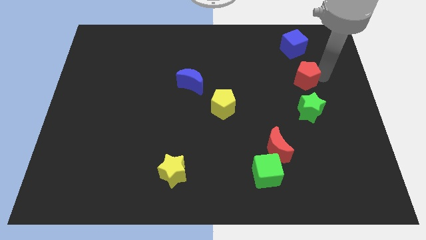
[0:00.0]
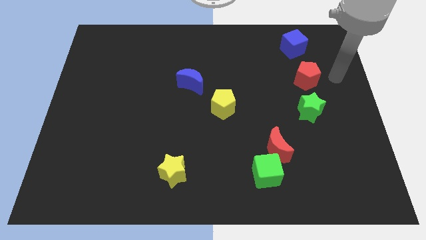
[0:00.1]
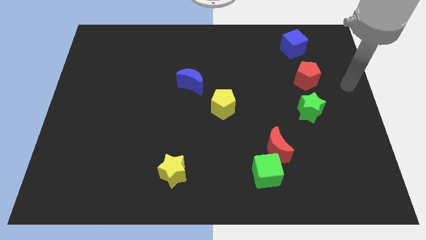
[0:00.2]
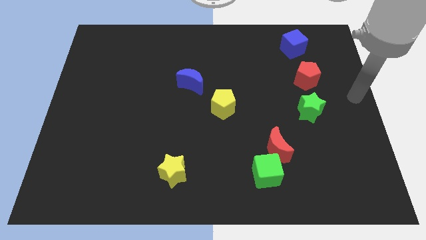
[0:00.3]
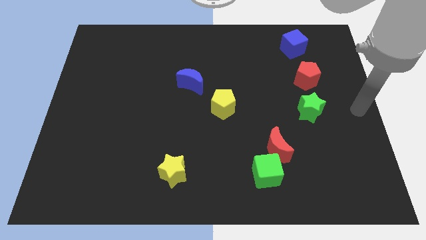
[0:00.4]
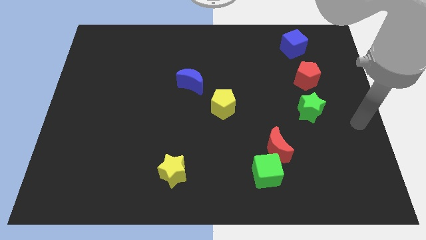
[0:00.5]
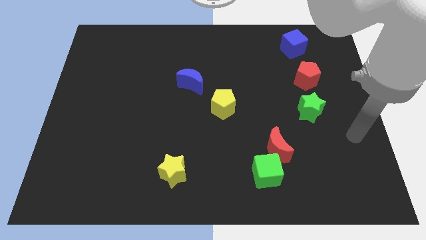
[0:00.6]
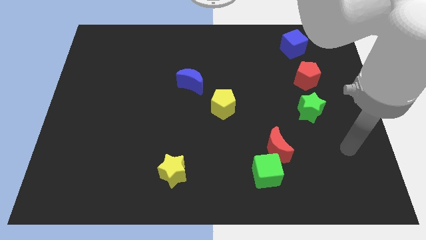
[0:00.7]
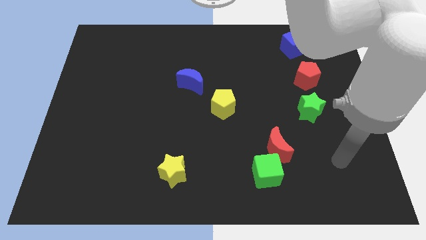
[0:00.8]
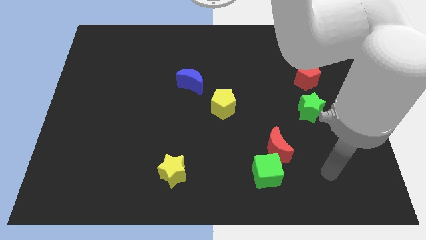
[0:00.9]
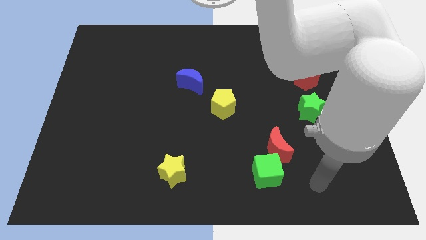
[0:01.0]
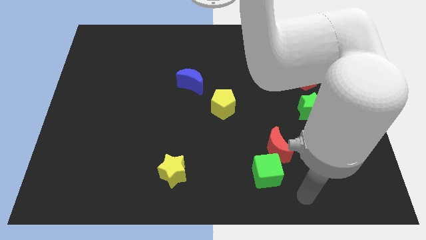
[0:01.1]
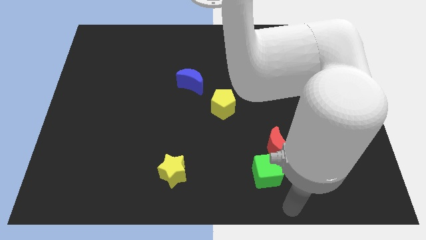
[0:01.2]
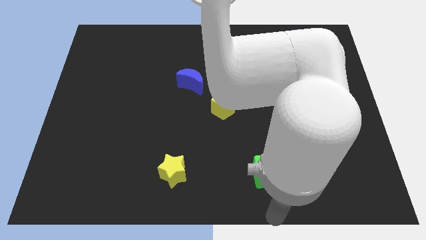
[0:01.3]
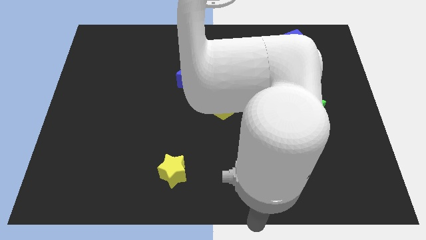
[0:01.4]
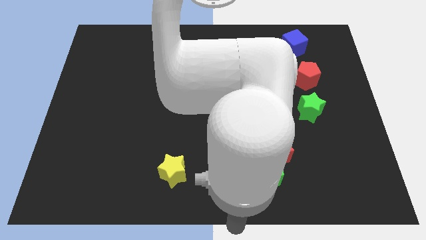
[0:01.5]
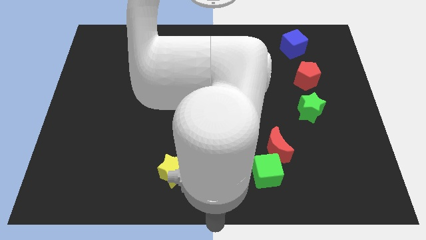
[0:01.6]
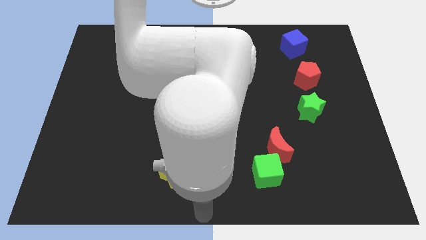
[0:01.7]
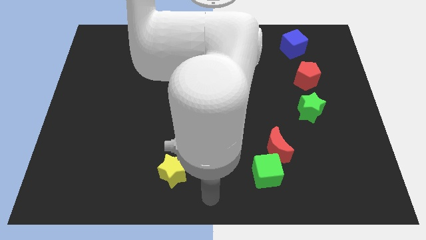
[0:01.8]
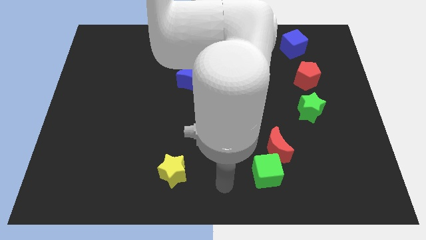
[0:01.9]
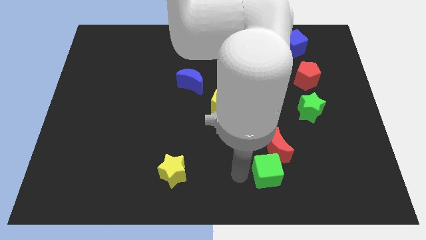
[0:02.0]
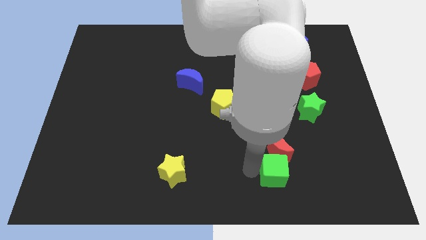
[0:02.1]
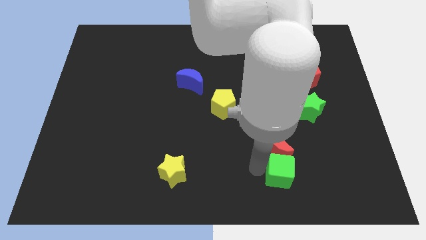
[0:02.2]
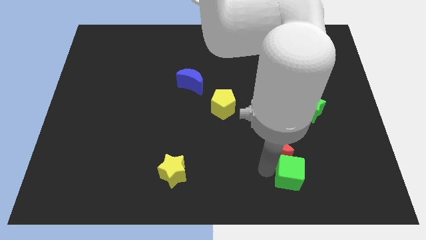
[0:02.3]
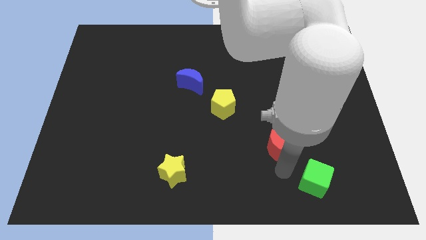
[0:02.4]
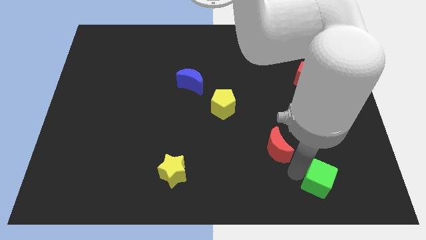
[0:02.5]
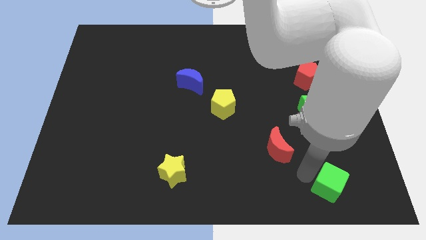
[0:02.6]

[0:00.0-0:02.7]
place green cube diagonally towards red crescent

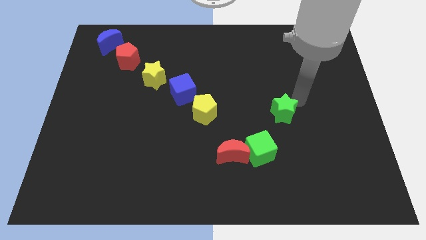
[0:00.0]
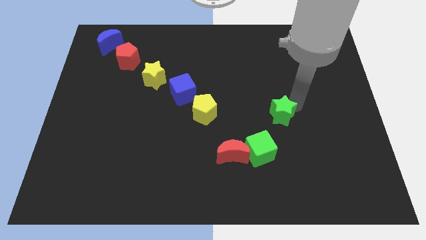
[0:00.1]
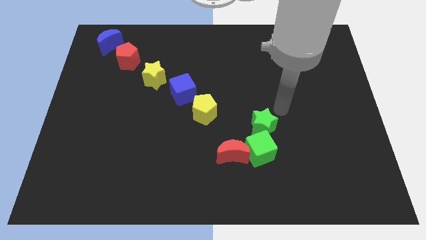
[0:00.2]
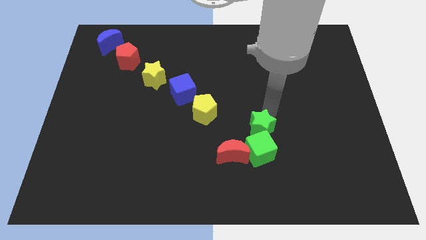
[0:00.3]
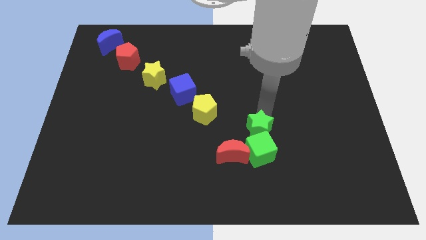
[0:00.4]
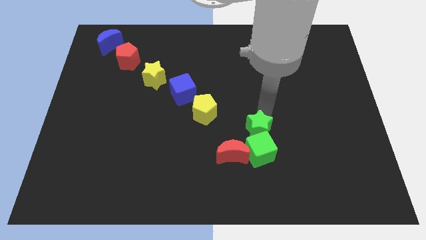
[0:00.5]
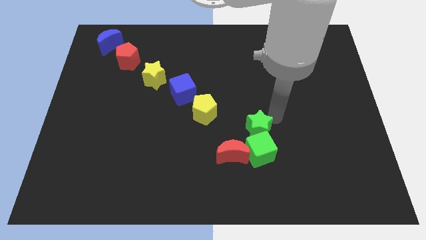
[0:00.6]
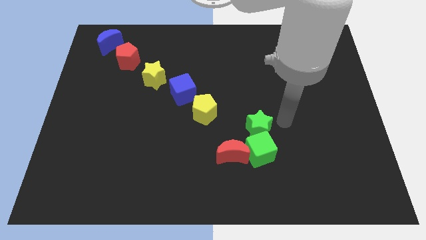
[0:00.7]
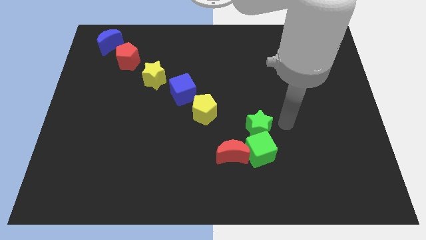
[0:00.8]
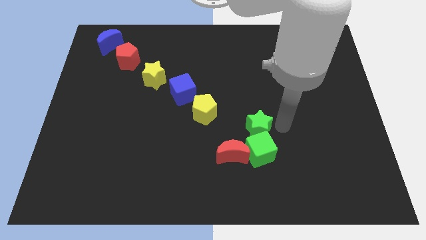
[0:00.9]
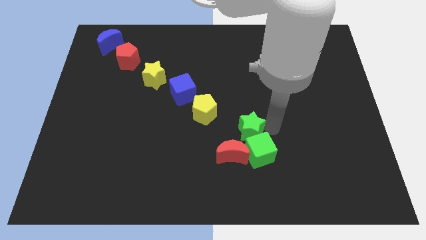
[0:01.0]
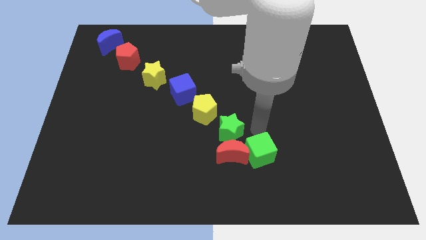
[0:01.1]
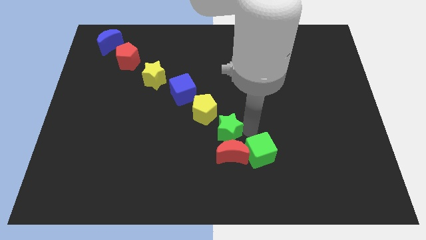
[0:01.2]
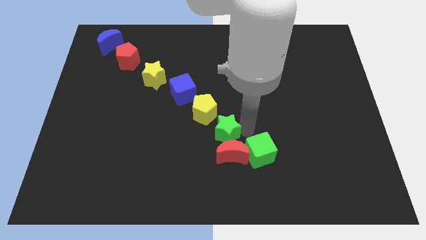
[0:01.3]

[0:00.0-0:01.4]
place the green star above the red crescent

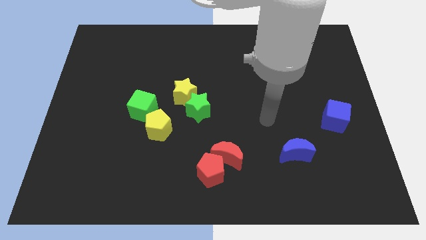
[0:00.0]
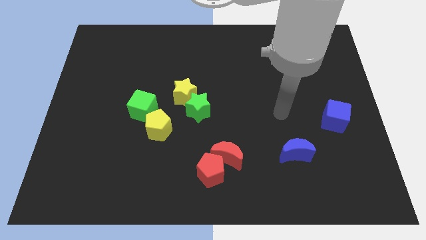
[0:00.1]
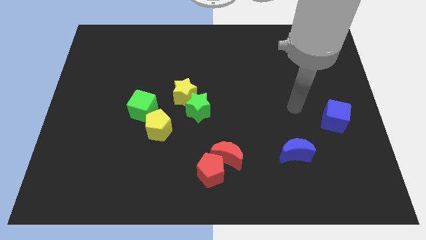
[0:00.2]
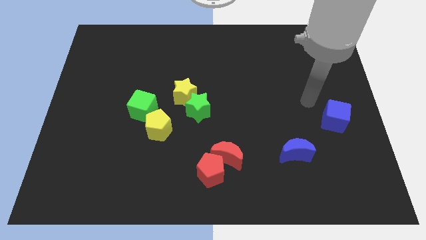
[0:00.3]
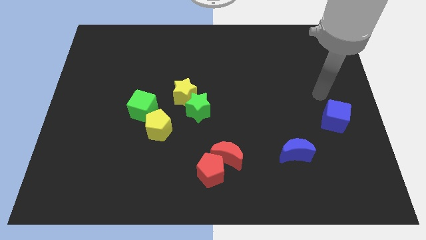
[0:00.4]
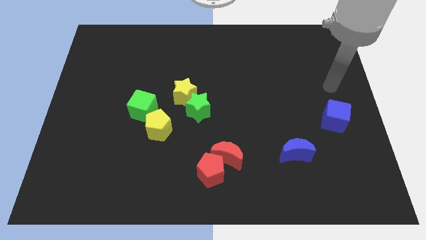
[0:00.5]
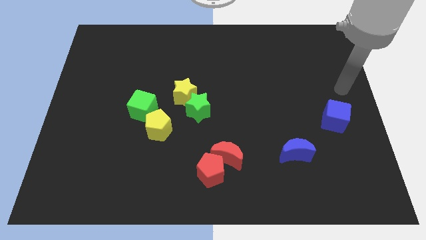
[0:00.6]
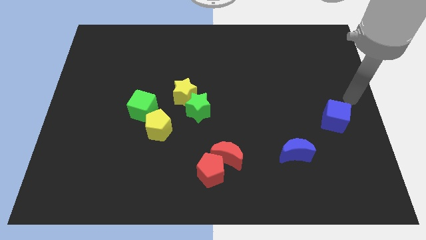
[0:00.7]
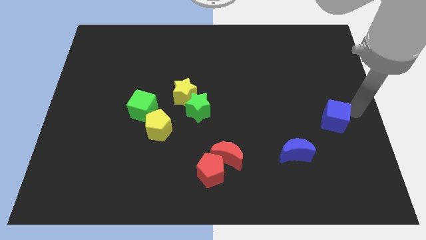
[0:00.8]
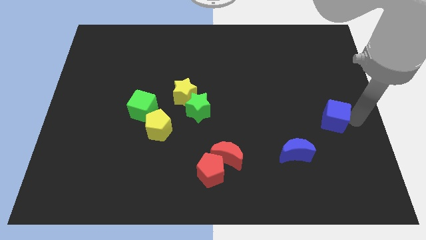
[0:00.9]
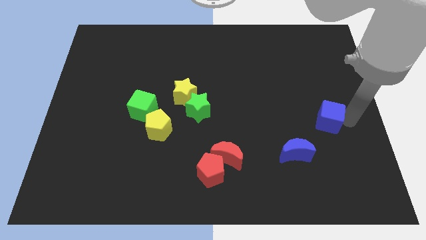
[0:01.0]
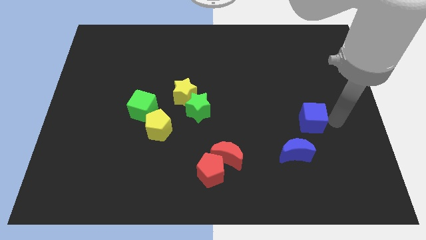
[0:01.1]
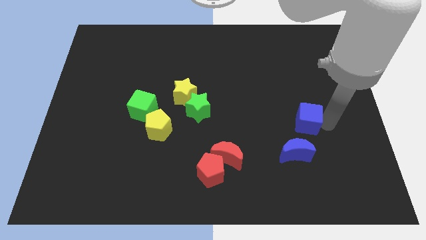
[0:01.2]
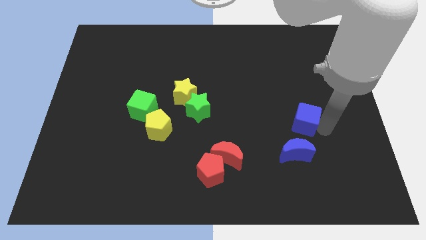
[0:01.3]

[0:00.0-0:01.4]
push blue cube to the blue crescent

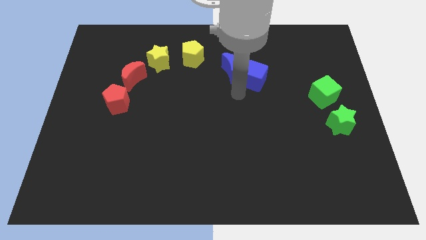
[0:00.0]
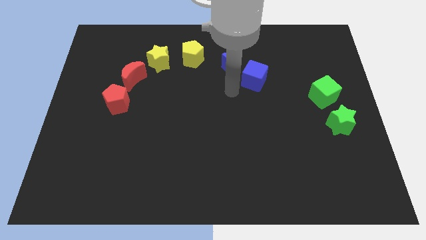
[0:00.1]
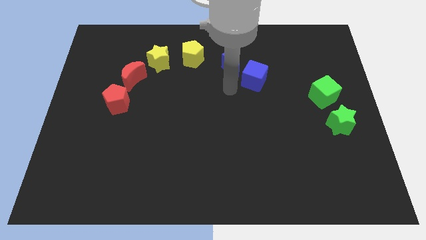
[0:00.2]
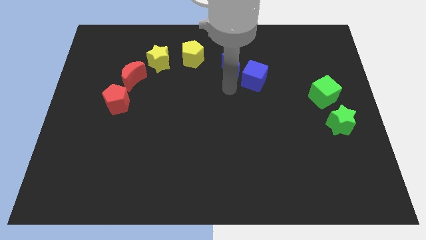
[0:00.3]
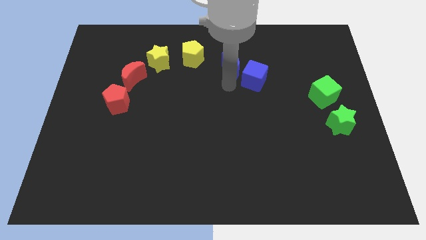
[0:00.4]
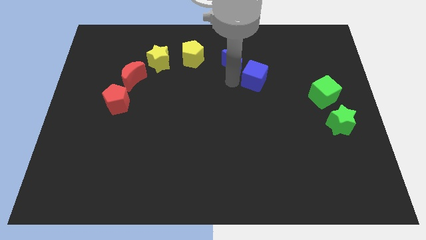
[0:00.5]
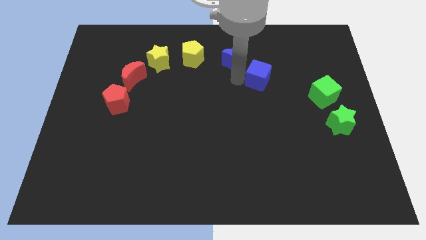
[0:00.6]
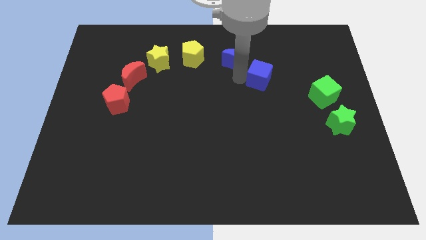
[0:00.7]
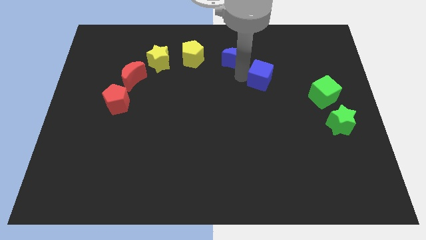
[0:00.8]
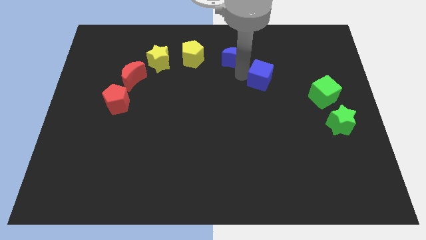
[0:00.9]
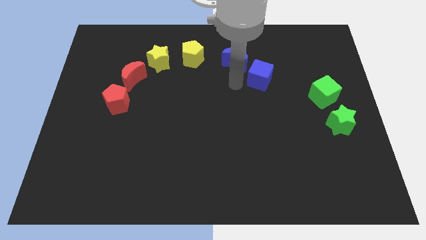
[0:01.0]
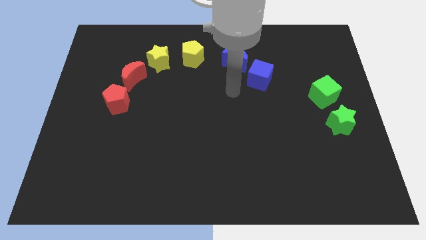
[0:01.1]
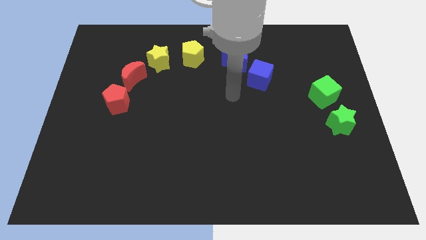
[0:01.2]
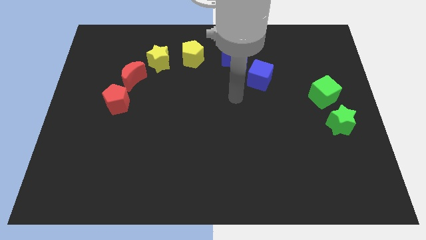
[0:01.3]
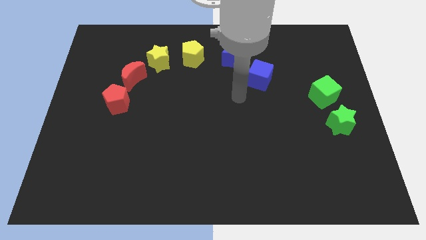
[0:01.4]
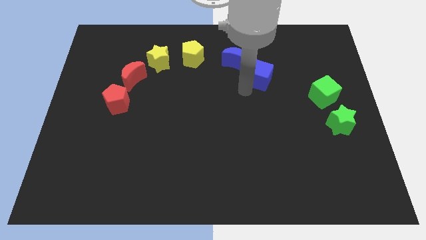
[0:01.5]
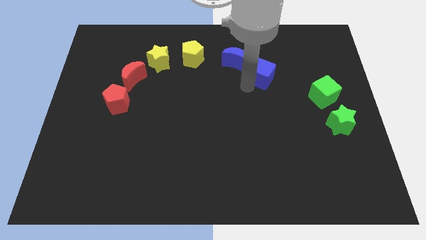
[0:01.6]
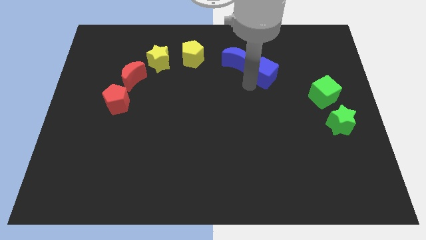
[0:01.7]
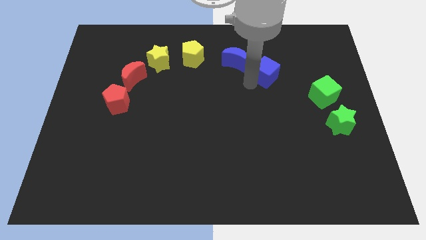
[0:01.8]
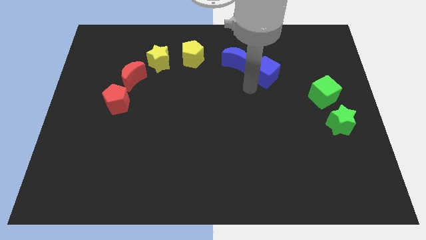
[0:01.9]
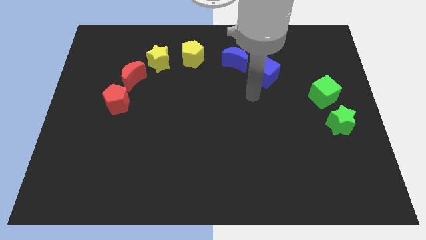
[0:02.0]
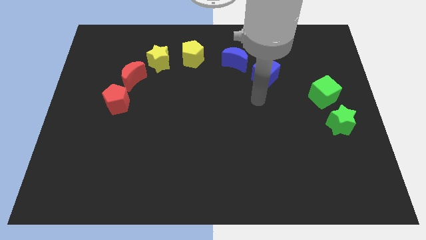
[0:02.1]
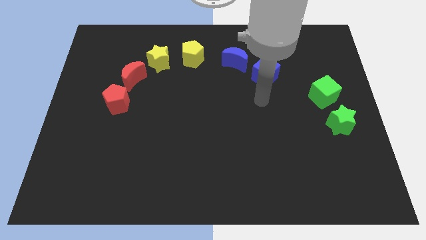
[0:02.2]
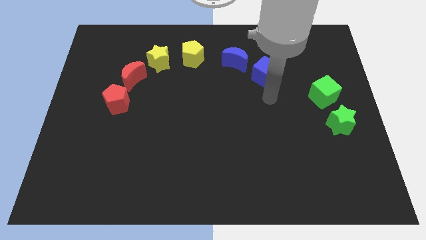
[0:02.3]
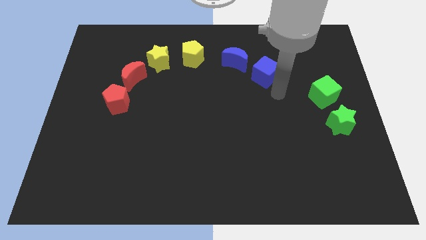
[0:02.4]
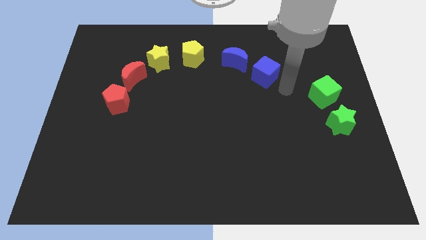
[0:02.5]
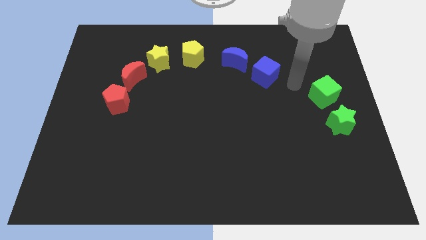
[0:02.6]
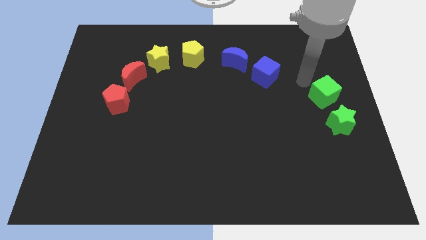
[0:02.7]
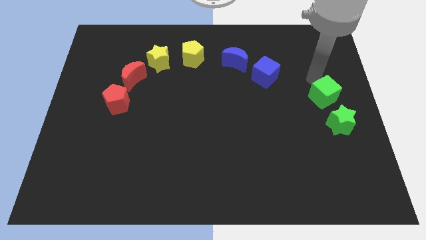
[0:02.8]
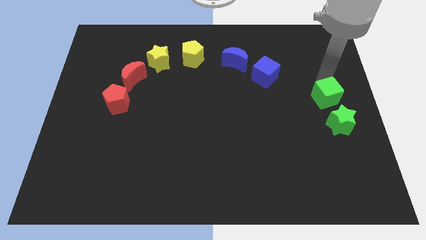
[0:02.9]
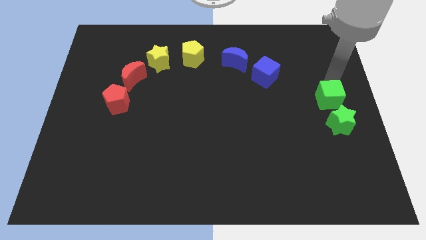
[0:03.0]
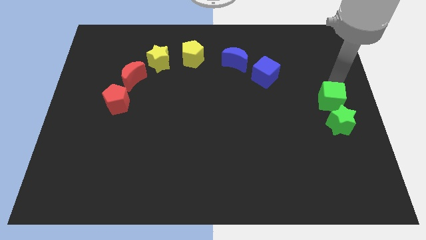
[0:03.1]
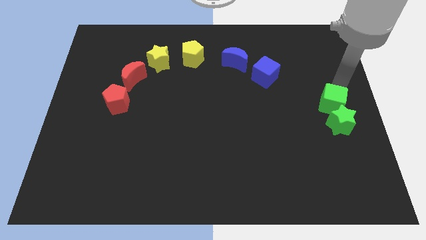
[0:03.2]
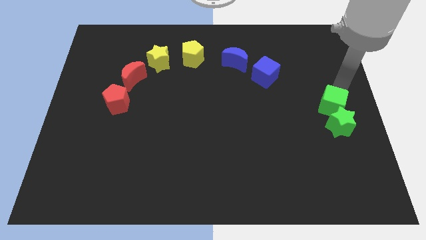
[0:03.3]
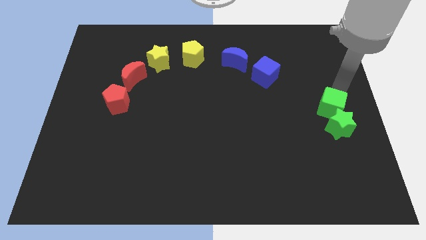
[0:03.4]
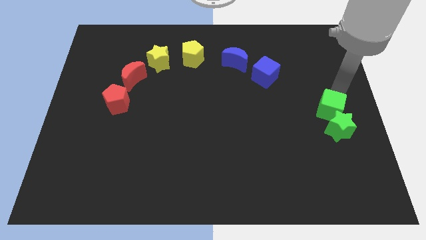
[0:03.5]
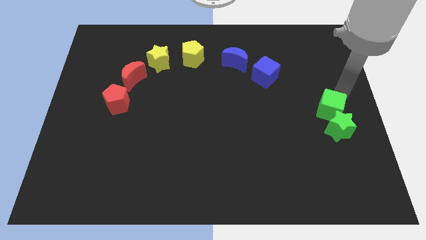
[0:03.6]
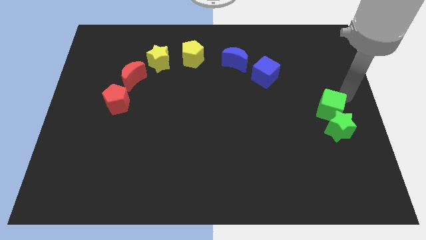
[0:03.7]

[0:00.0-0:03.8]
push the green cube into the green star
